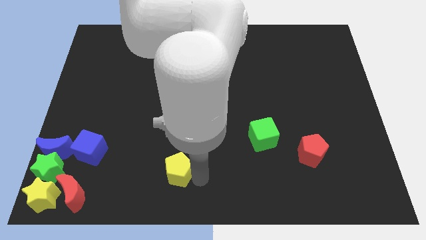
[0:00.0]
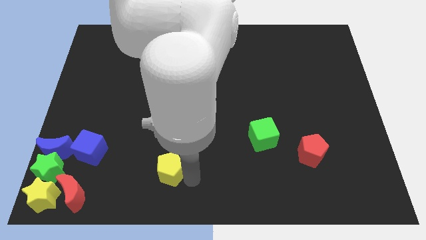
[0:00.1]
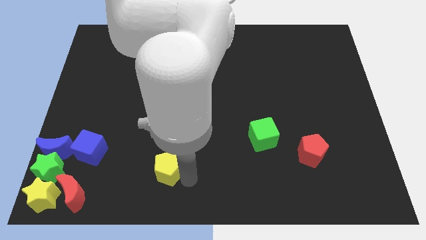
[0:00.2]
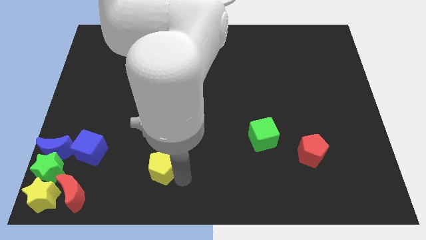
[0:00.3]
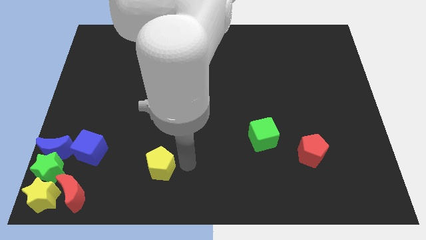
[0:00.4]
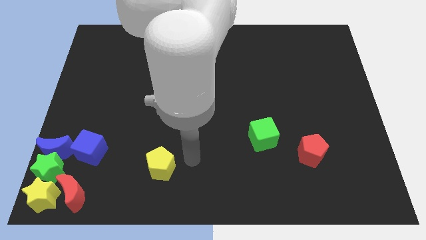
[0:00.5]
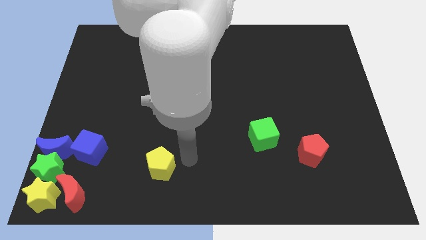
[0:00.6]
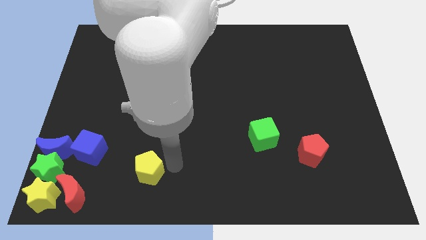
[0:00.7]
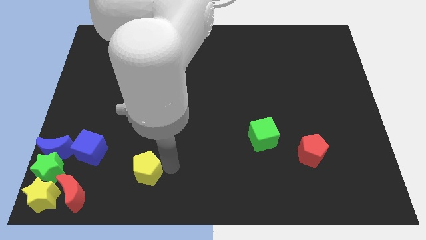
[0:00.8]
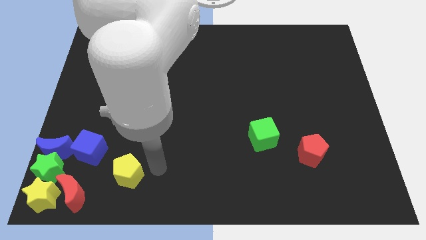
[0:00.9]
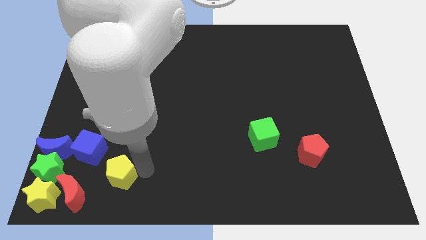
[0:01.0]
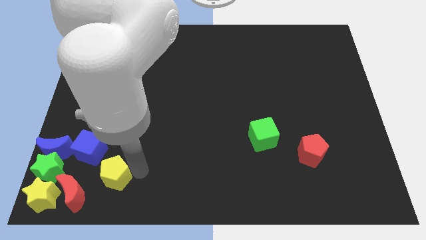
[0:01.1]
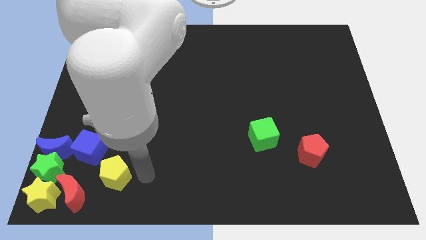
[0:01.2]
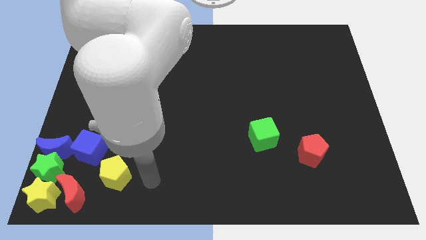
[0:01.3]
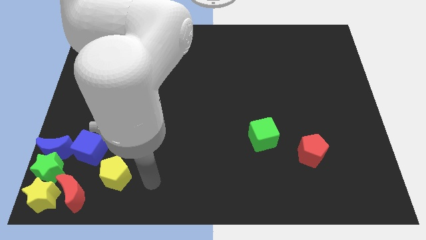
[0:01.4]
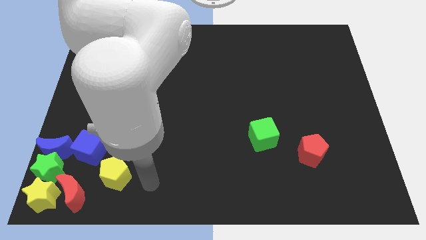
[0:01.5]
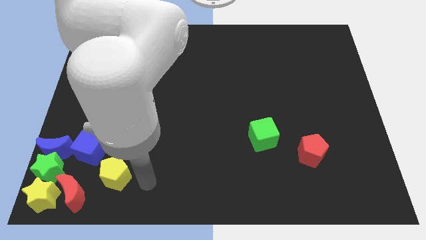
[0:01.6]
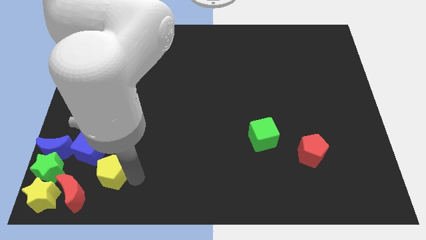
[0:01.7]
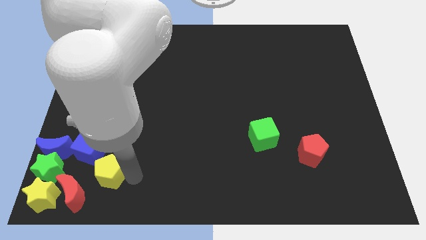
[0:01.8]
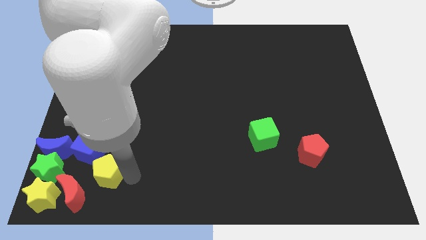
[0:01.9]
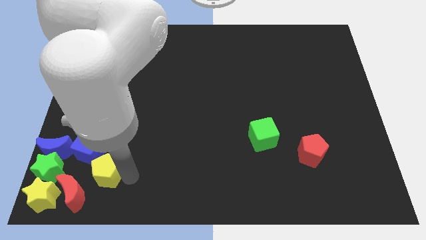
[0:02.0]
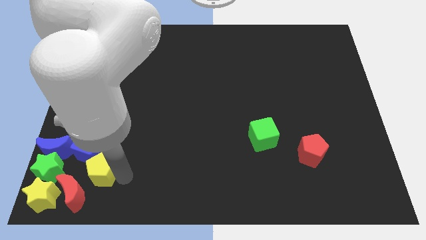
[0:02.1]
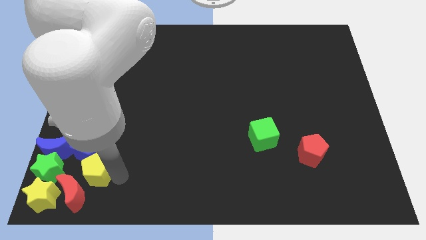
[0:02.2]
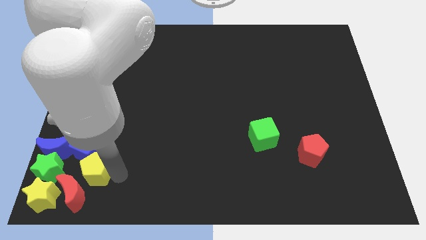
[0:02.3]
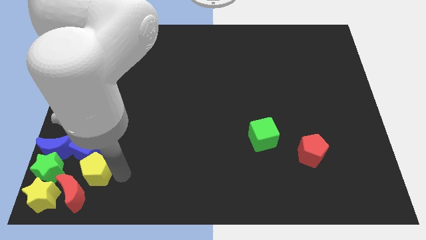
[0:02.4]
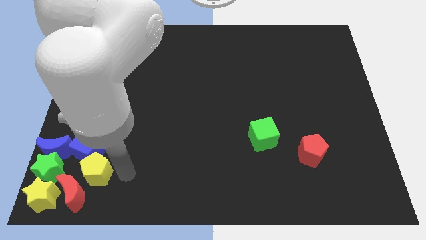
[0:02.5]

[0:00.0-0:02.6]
put the yellow pentagon and blue cube together

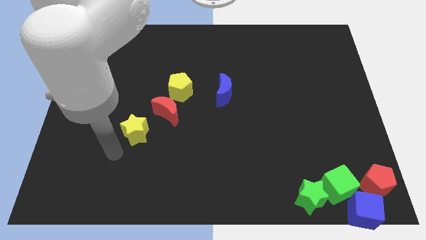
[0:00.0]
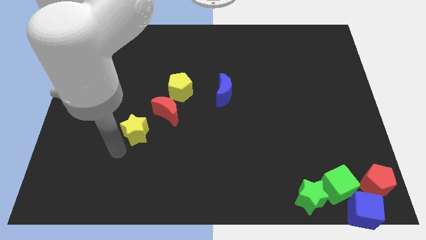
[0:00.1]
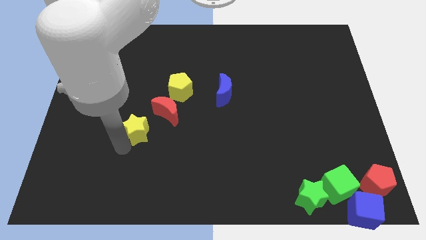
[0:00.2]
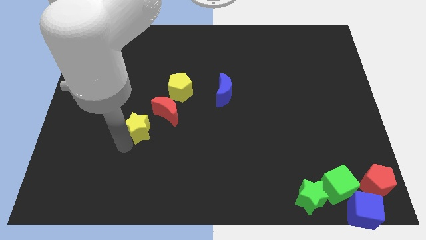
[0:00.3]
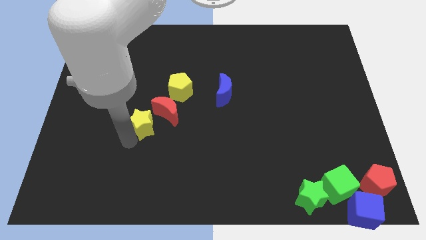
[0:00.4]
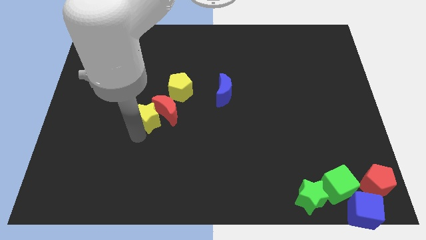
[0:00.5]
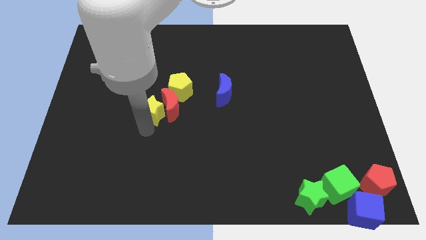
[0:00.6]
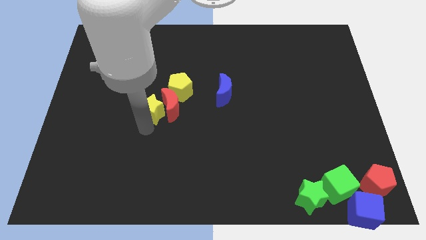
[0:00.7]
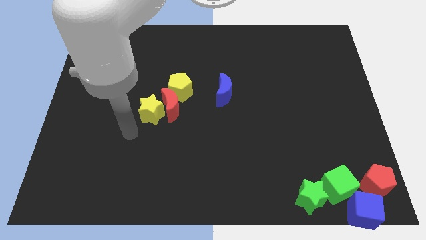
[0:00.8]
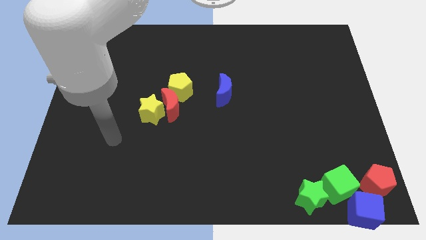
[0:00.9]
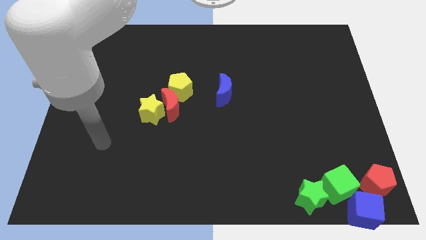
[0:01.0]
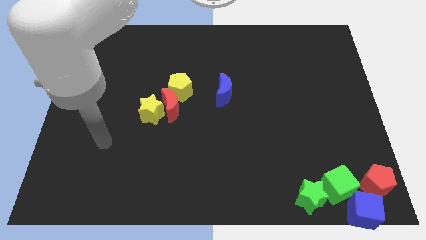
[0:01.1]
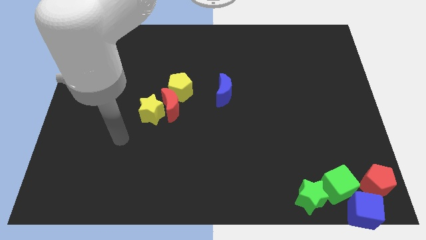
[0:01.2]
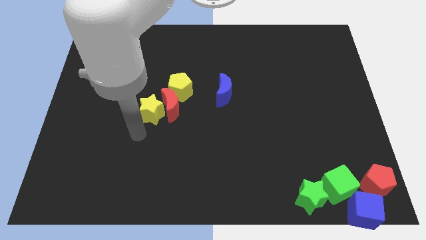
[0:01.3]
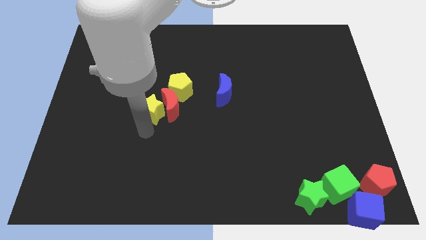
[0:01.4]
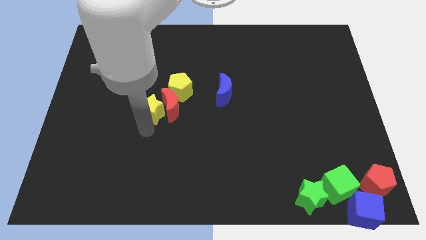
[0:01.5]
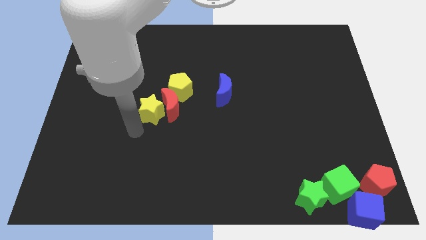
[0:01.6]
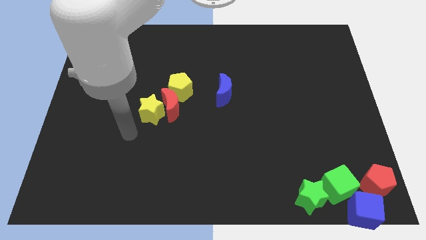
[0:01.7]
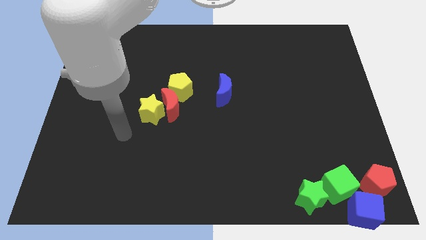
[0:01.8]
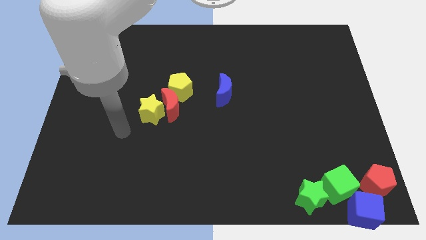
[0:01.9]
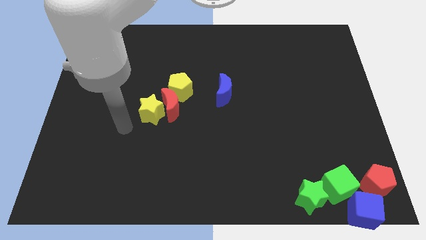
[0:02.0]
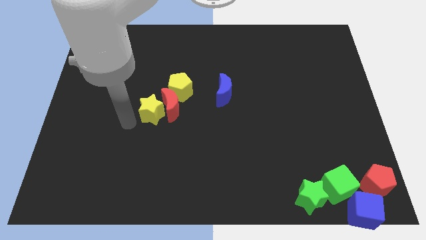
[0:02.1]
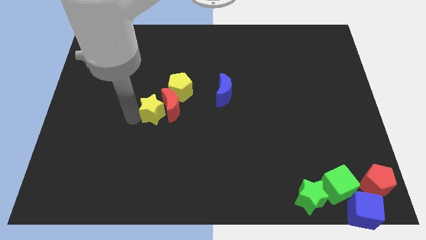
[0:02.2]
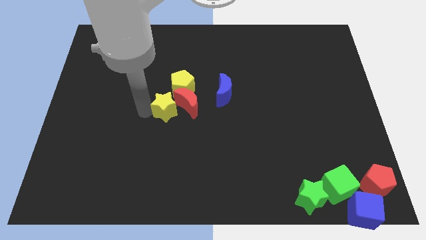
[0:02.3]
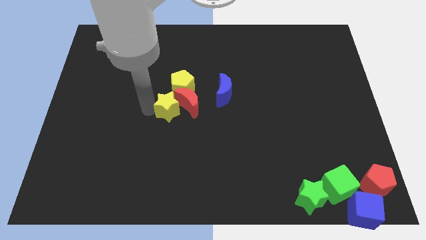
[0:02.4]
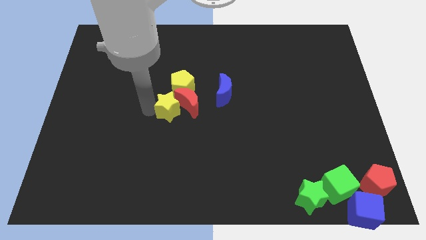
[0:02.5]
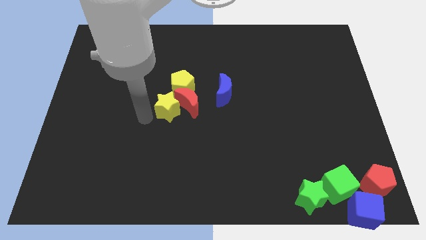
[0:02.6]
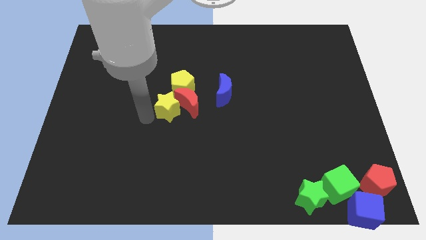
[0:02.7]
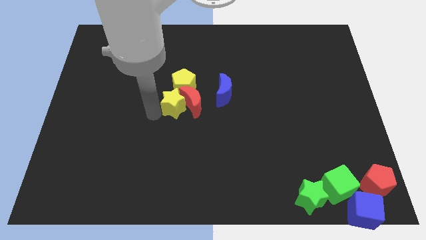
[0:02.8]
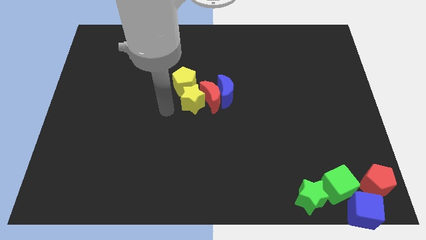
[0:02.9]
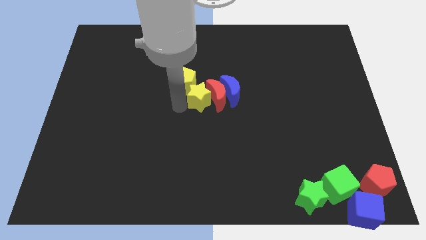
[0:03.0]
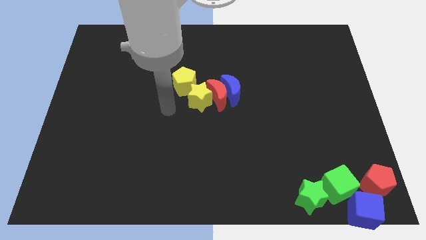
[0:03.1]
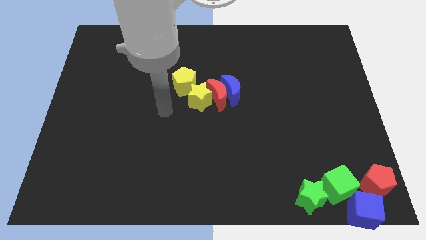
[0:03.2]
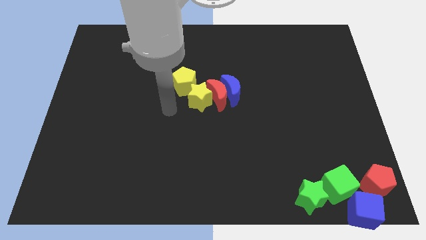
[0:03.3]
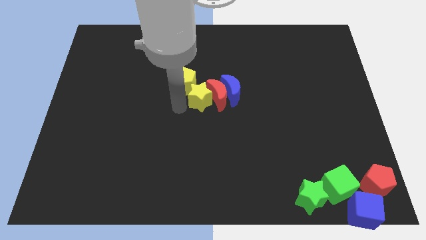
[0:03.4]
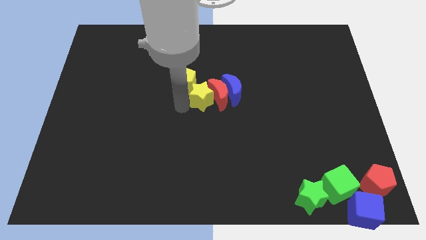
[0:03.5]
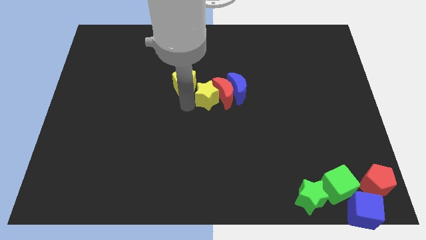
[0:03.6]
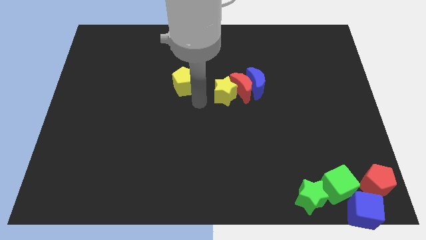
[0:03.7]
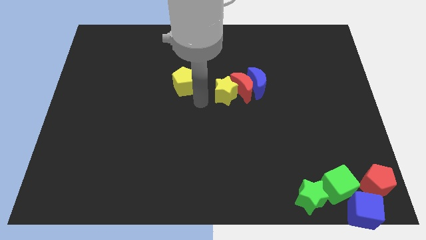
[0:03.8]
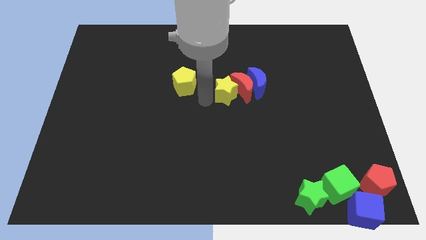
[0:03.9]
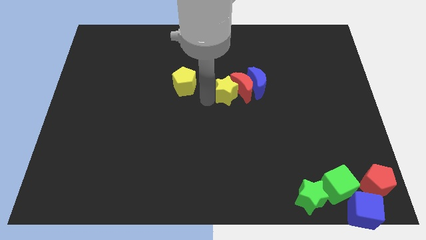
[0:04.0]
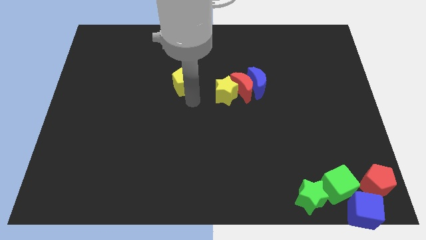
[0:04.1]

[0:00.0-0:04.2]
move the yellow star into the red moon

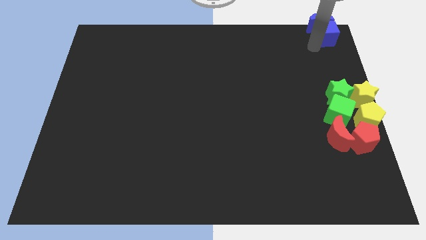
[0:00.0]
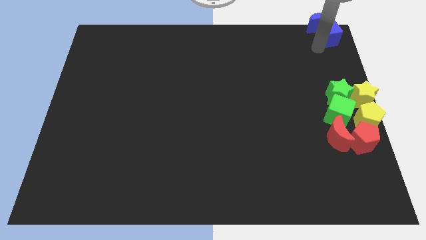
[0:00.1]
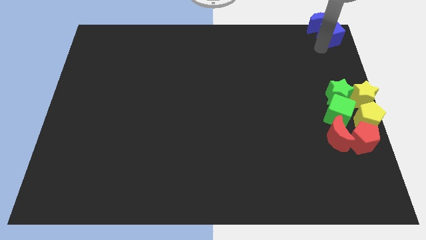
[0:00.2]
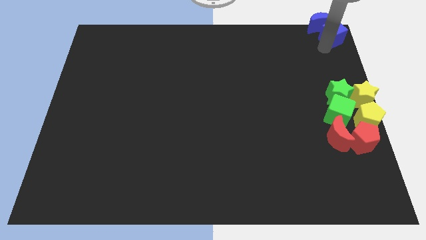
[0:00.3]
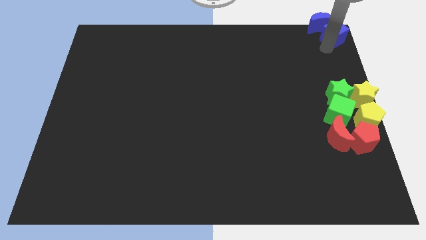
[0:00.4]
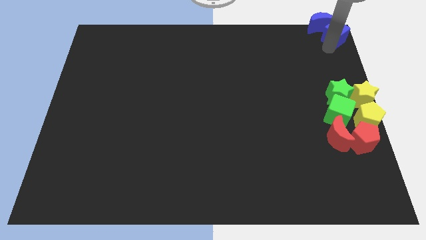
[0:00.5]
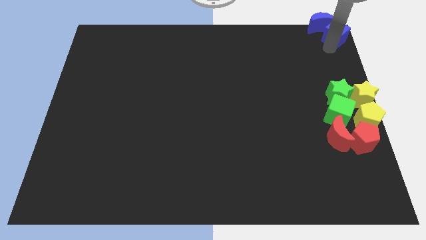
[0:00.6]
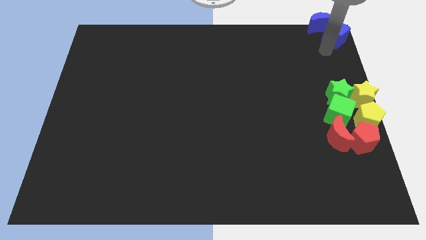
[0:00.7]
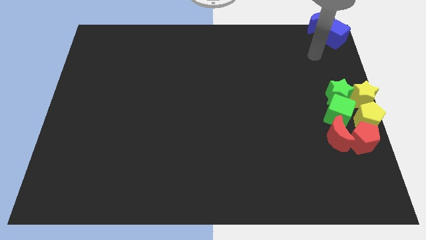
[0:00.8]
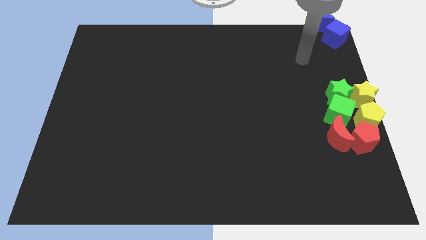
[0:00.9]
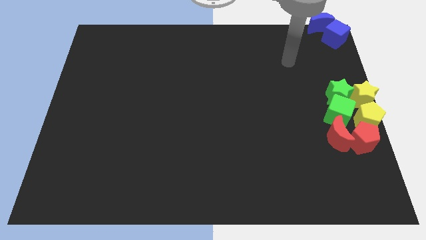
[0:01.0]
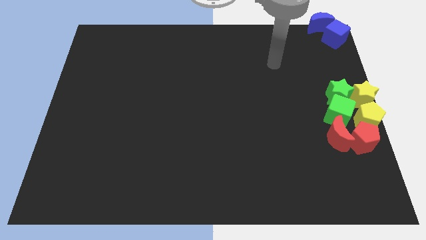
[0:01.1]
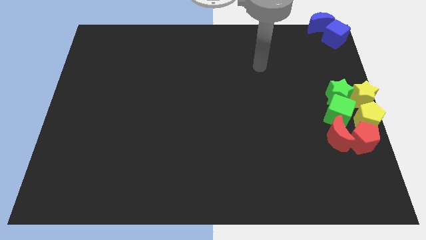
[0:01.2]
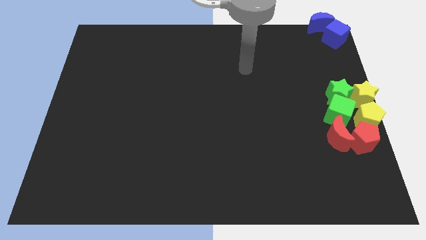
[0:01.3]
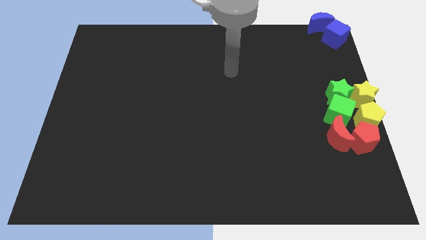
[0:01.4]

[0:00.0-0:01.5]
move the blue blocks to top right corner of the board

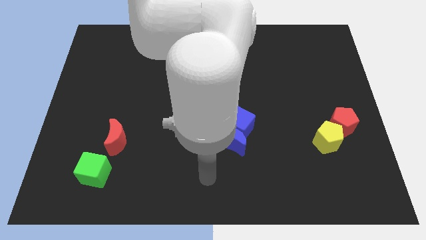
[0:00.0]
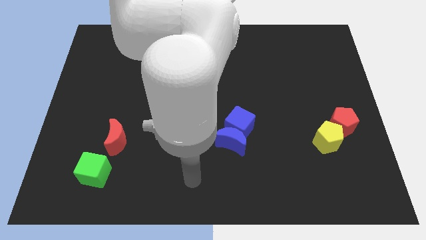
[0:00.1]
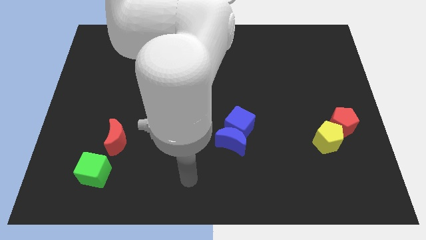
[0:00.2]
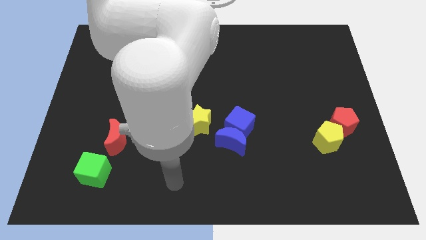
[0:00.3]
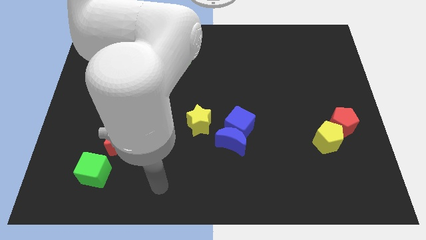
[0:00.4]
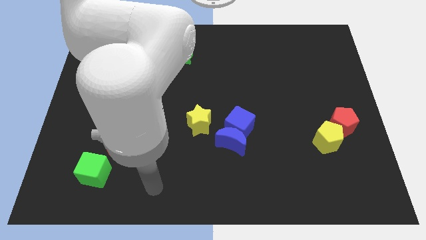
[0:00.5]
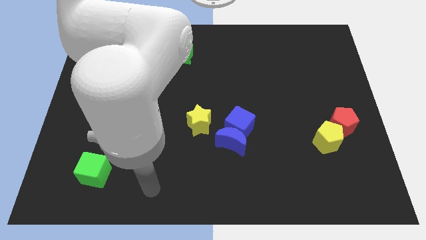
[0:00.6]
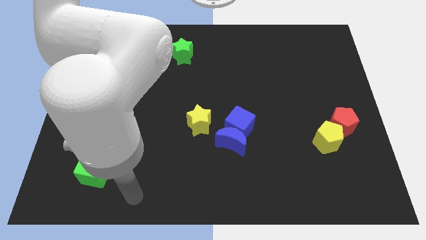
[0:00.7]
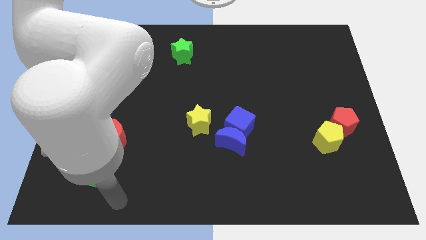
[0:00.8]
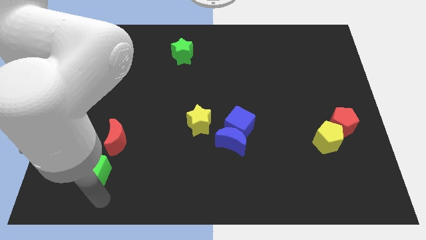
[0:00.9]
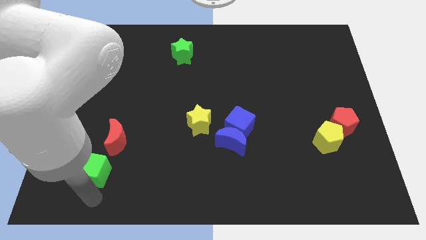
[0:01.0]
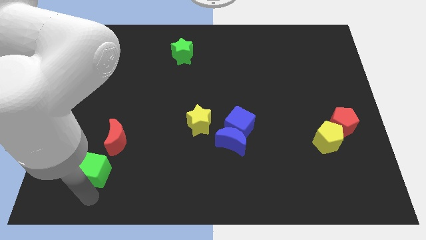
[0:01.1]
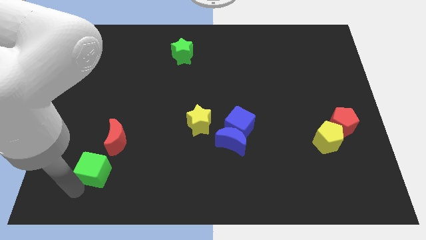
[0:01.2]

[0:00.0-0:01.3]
place your arm at the bottom of the green cube
